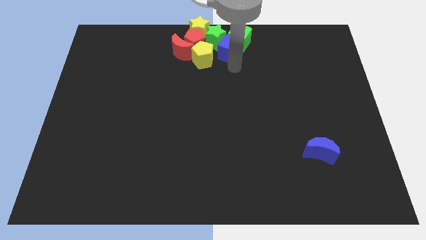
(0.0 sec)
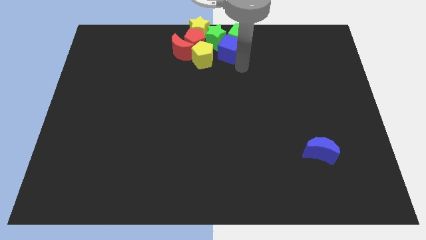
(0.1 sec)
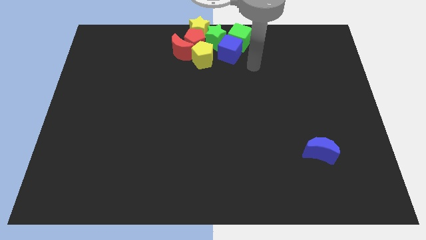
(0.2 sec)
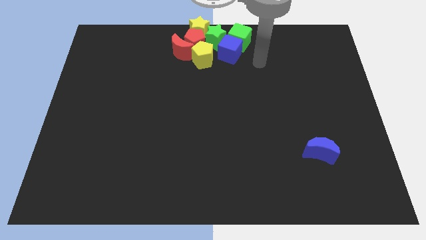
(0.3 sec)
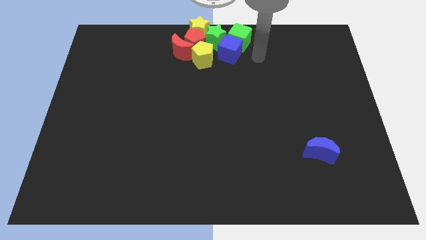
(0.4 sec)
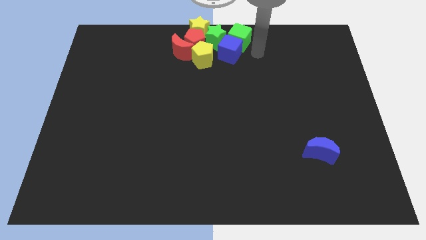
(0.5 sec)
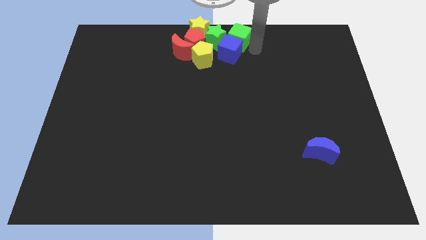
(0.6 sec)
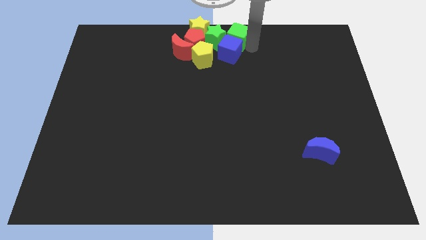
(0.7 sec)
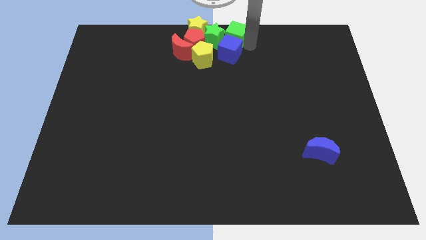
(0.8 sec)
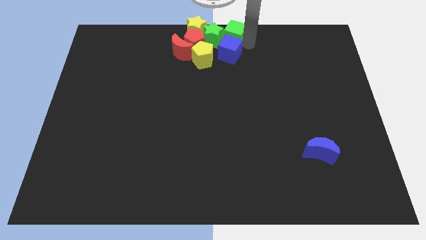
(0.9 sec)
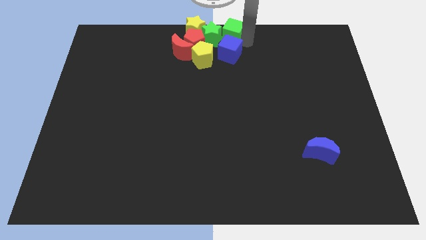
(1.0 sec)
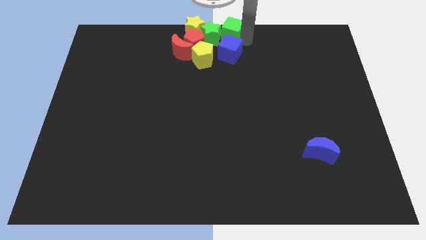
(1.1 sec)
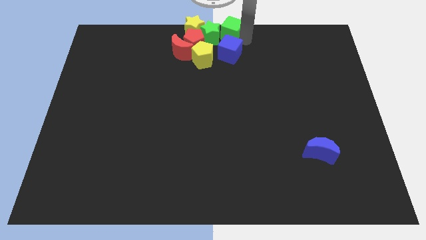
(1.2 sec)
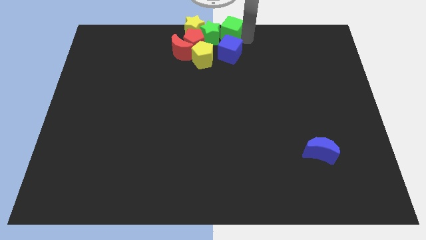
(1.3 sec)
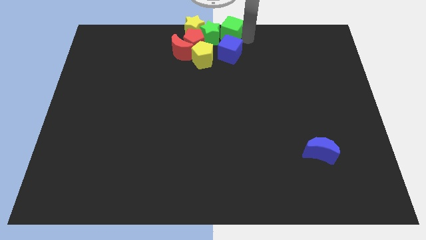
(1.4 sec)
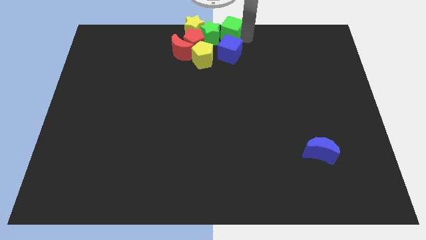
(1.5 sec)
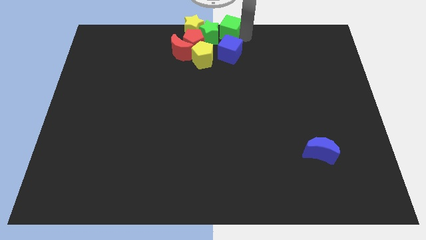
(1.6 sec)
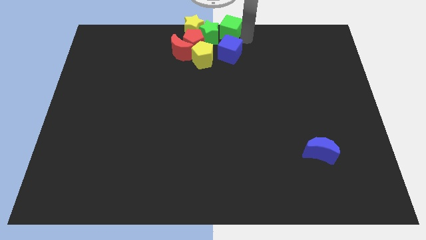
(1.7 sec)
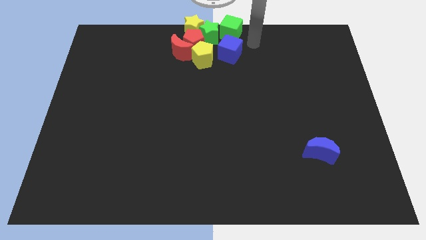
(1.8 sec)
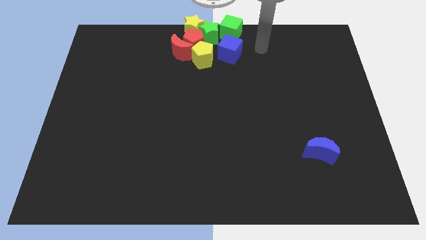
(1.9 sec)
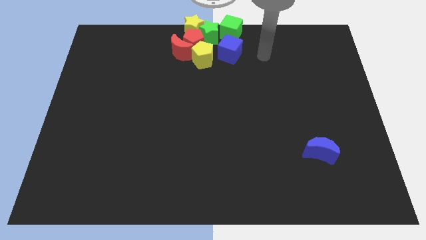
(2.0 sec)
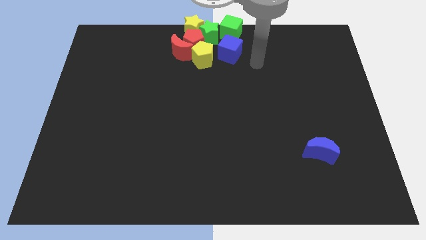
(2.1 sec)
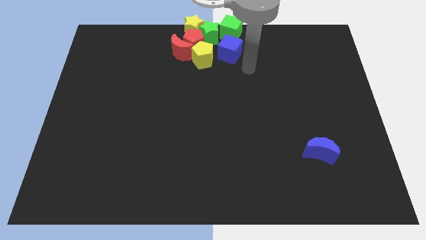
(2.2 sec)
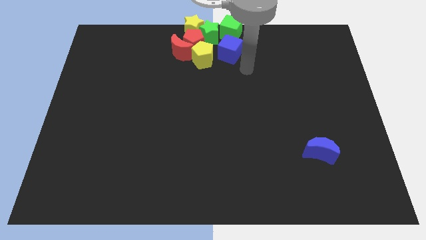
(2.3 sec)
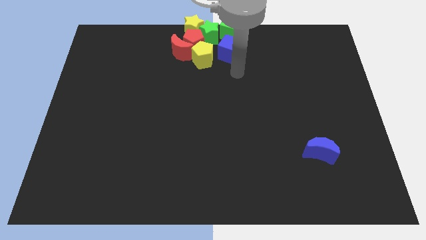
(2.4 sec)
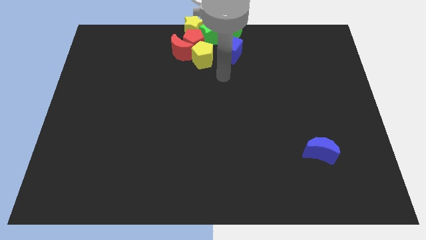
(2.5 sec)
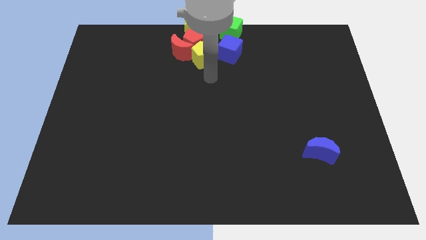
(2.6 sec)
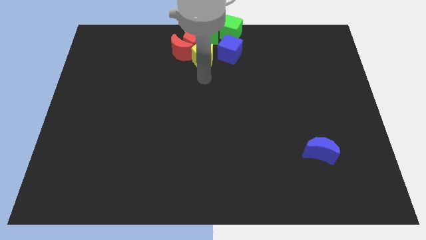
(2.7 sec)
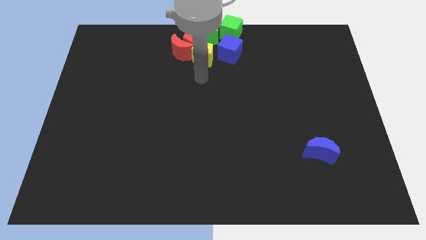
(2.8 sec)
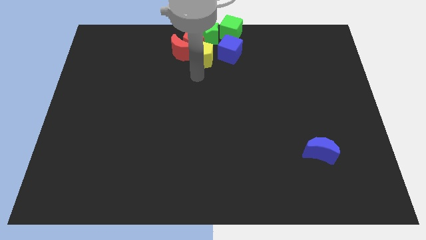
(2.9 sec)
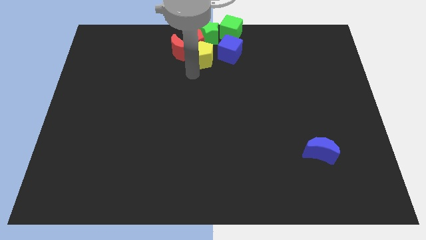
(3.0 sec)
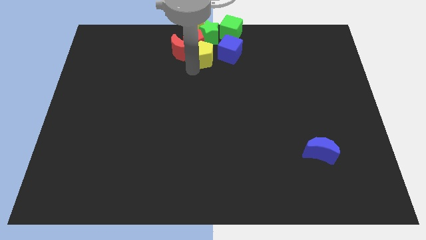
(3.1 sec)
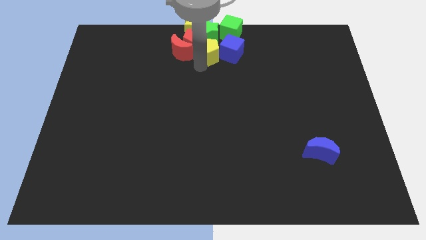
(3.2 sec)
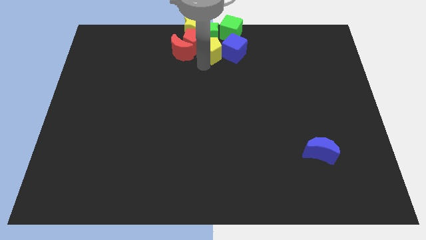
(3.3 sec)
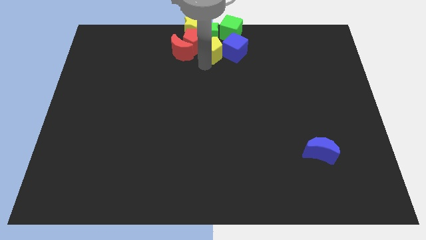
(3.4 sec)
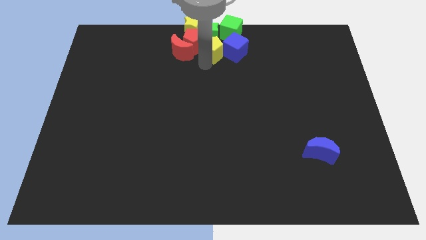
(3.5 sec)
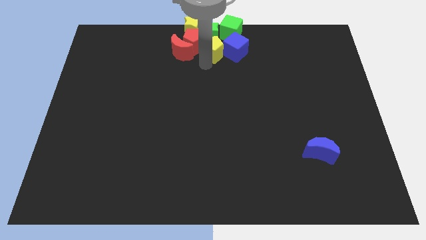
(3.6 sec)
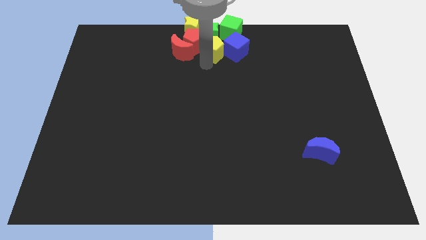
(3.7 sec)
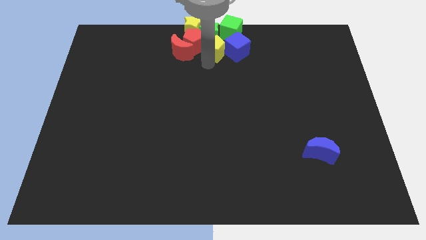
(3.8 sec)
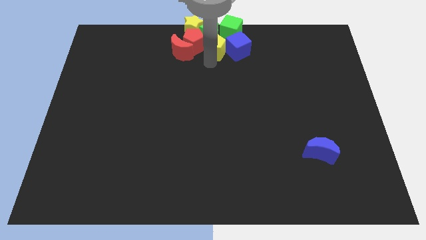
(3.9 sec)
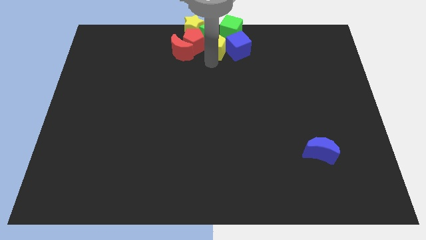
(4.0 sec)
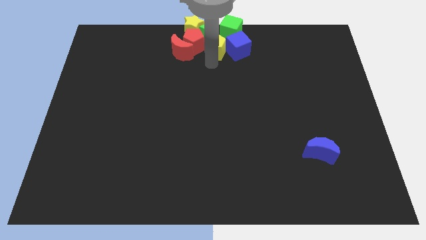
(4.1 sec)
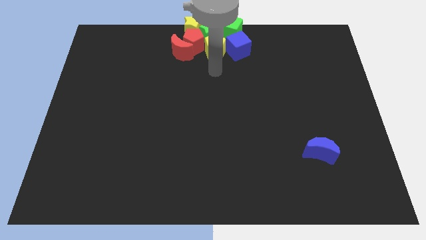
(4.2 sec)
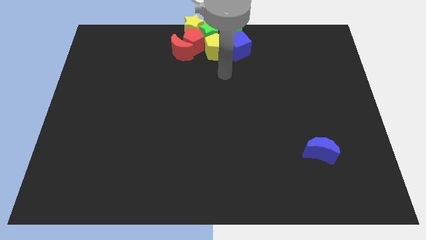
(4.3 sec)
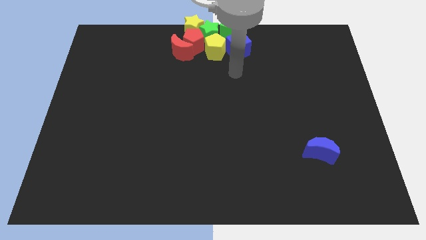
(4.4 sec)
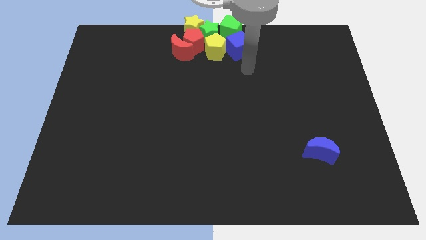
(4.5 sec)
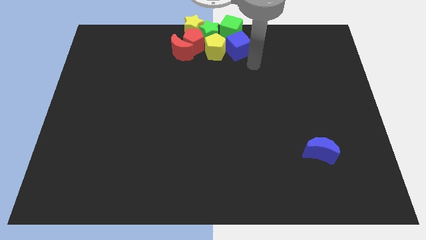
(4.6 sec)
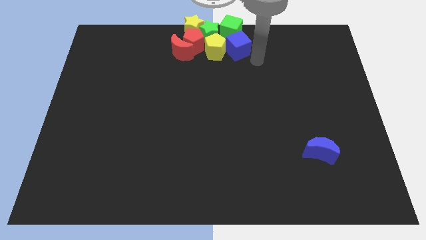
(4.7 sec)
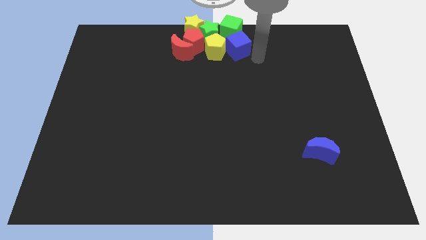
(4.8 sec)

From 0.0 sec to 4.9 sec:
touch group of blocks

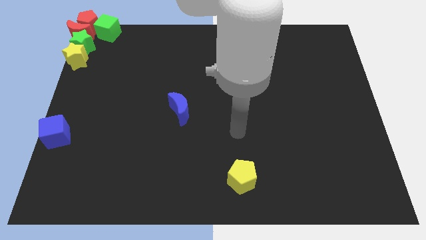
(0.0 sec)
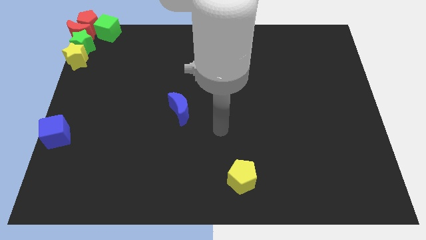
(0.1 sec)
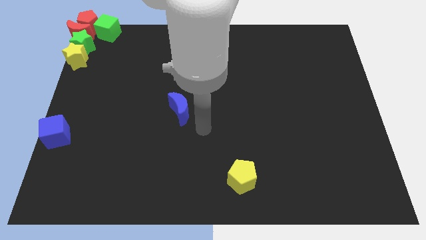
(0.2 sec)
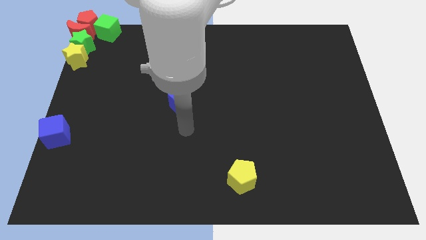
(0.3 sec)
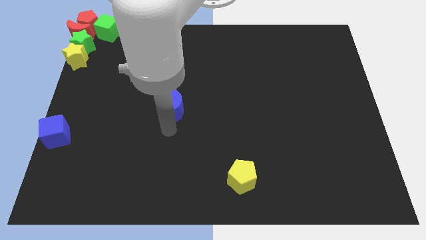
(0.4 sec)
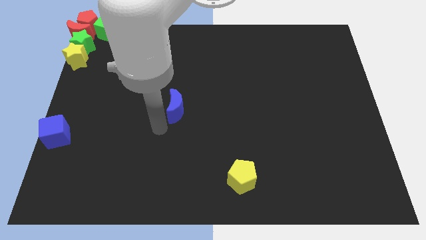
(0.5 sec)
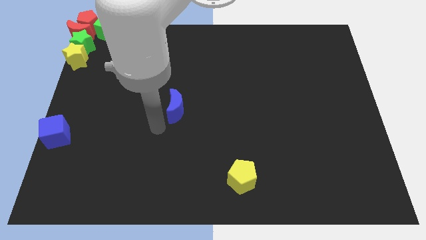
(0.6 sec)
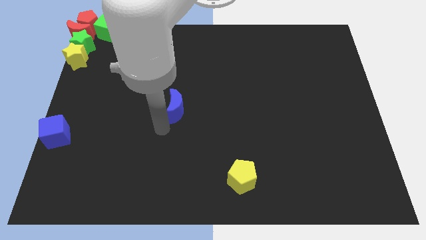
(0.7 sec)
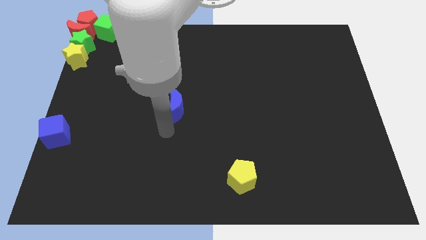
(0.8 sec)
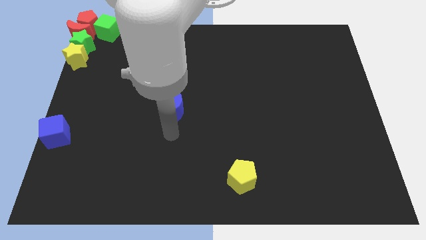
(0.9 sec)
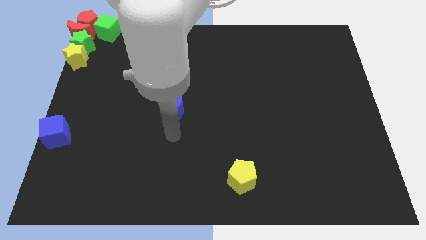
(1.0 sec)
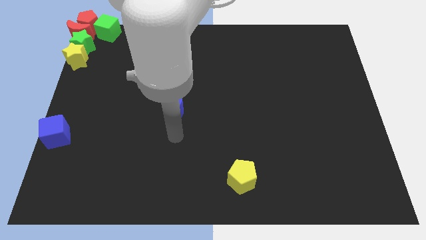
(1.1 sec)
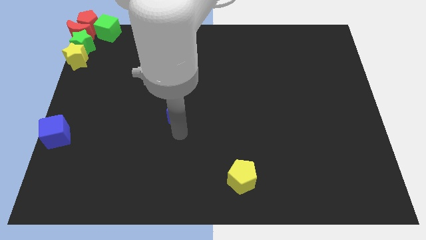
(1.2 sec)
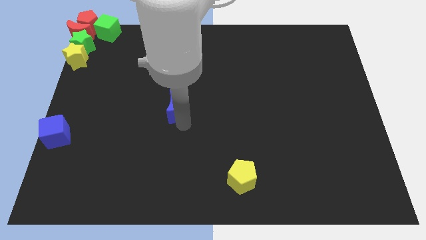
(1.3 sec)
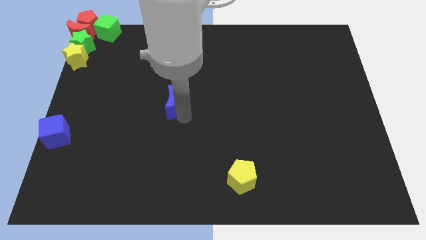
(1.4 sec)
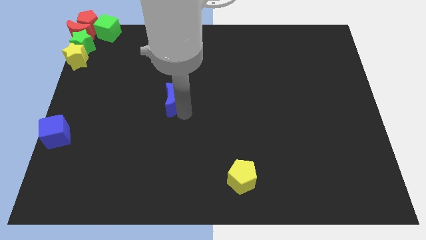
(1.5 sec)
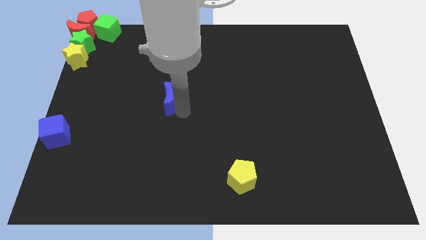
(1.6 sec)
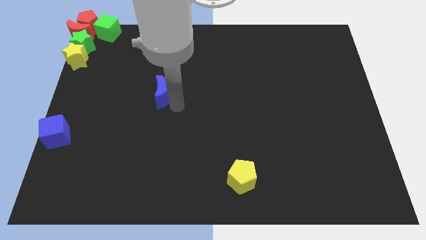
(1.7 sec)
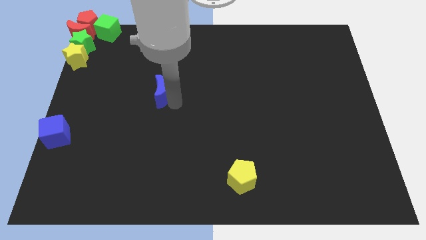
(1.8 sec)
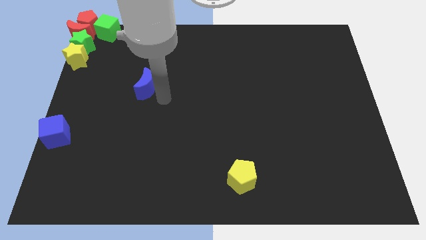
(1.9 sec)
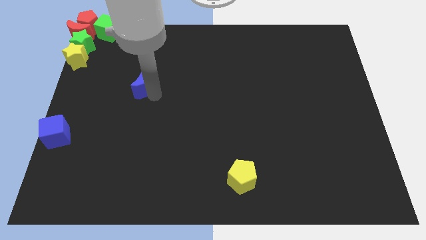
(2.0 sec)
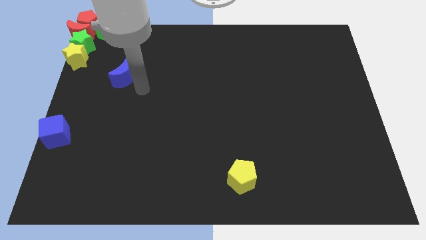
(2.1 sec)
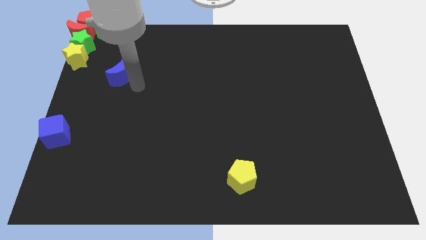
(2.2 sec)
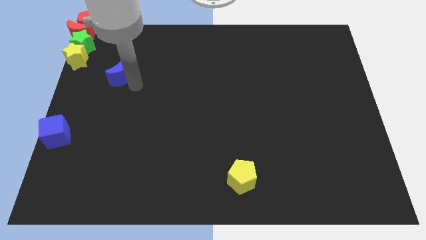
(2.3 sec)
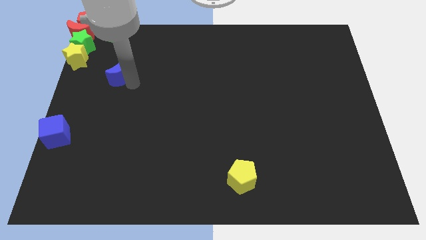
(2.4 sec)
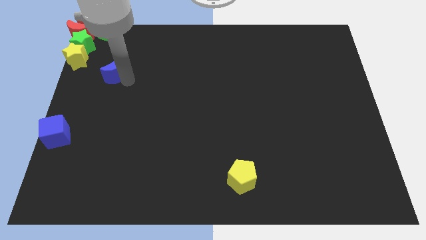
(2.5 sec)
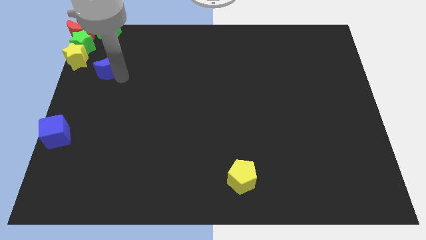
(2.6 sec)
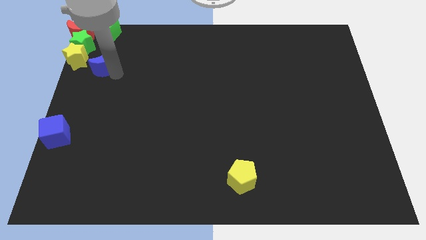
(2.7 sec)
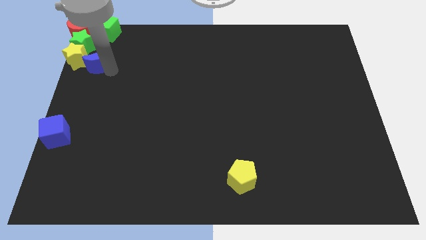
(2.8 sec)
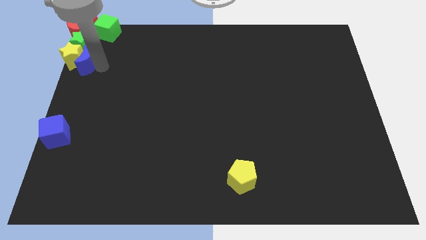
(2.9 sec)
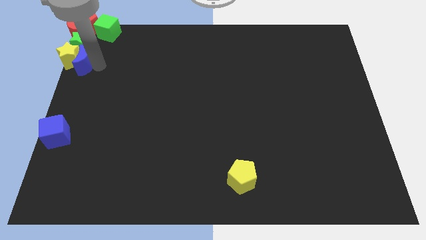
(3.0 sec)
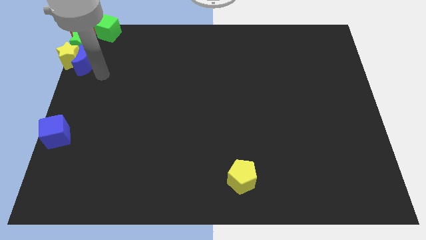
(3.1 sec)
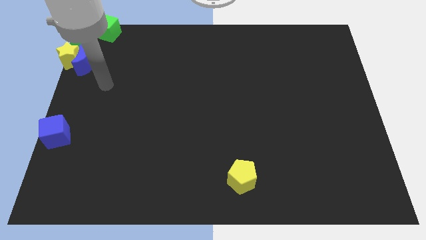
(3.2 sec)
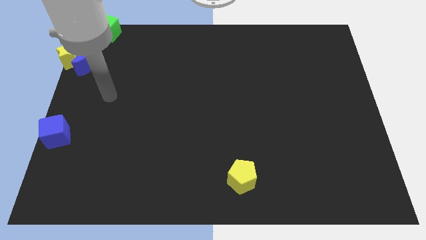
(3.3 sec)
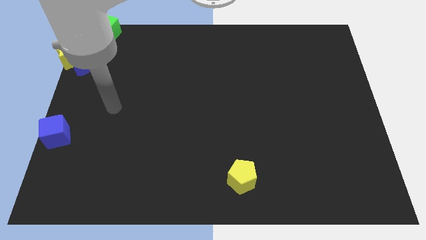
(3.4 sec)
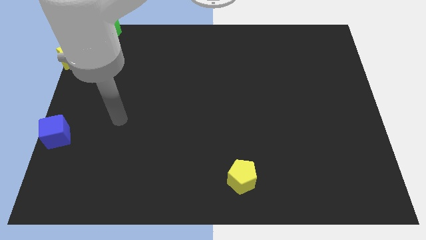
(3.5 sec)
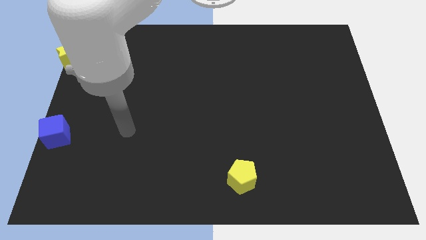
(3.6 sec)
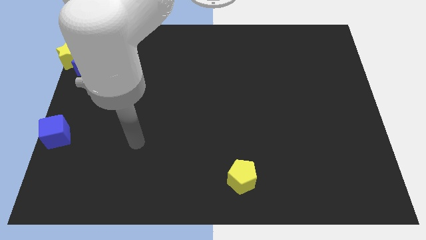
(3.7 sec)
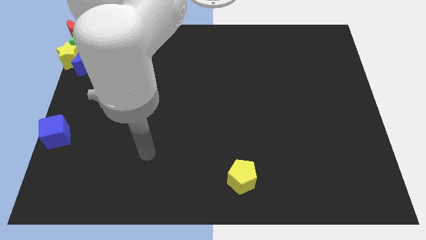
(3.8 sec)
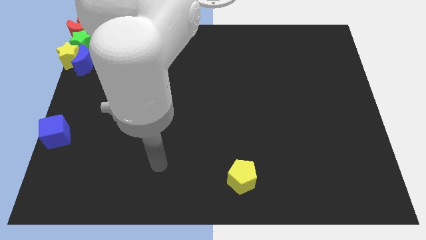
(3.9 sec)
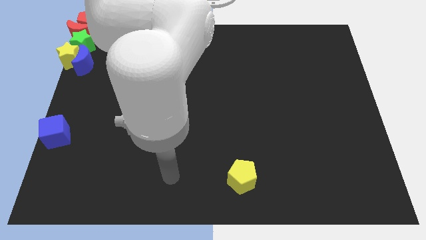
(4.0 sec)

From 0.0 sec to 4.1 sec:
push the blue crescent to the right side of the yellow star
